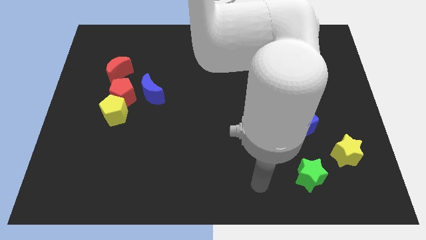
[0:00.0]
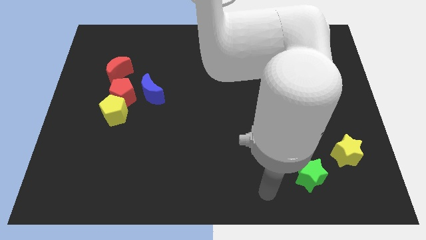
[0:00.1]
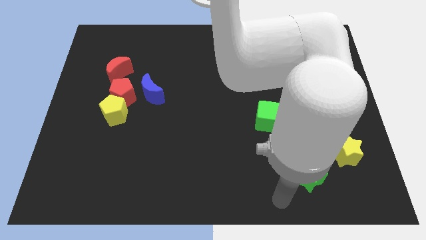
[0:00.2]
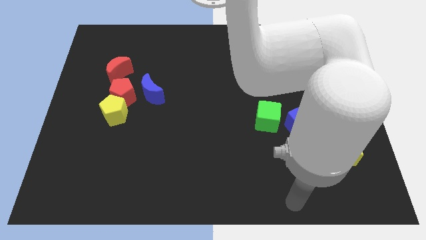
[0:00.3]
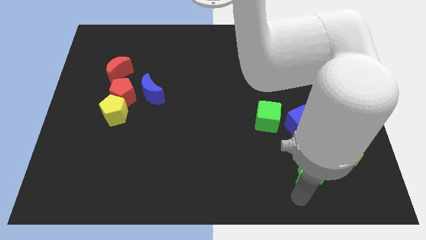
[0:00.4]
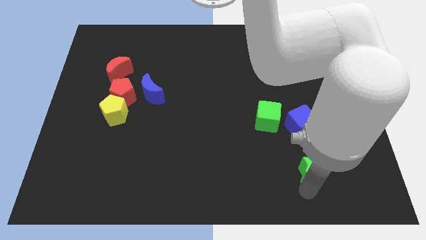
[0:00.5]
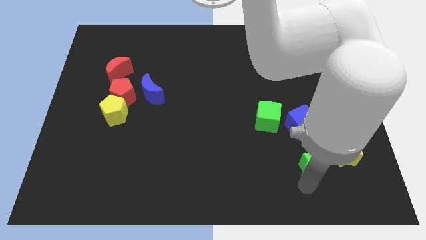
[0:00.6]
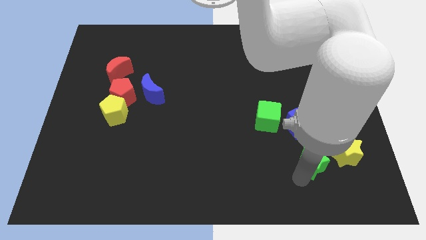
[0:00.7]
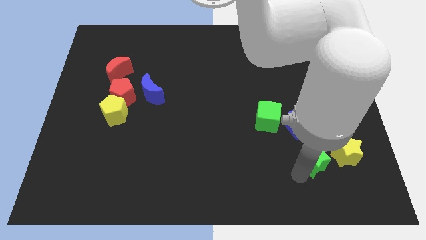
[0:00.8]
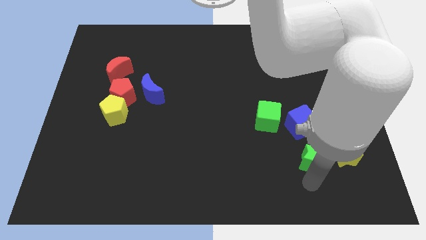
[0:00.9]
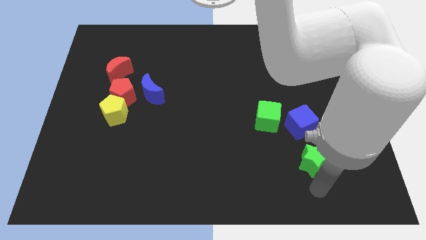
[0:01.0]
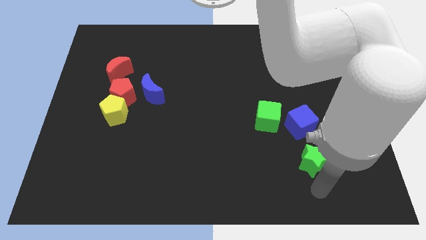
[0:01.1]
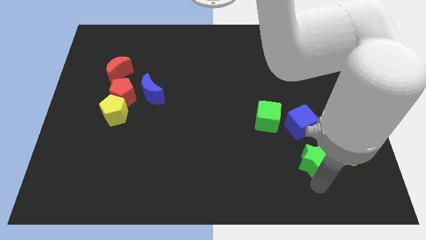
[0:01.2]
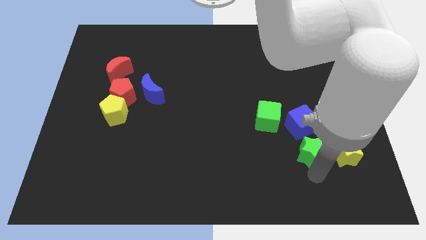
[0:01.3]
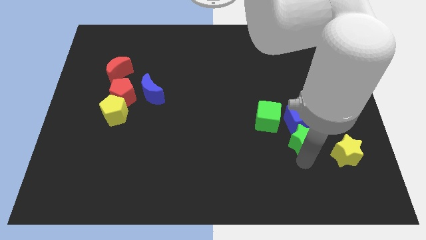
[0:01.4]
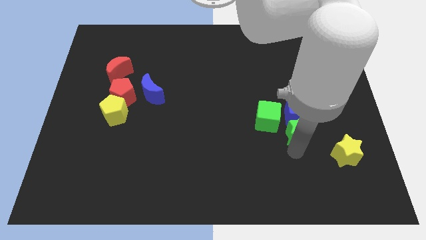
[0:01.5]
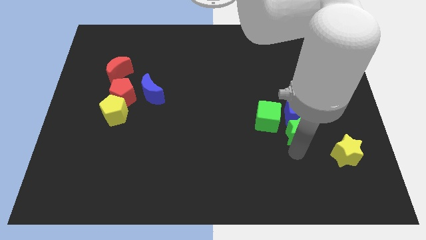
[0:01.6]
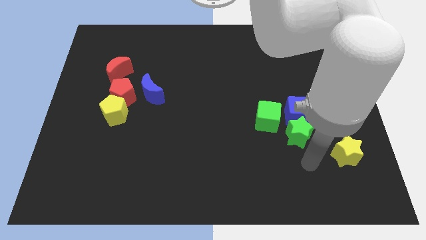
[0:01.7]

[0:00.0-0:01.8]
push the green star into the blue cube towards the top

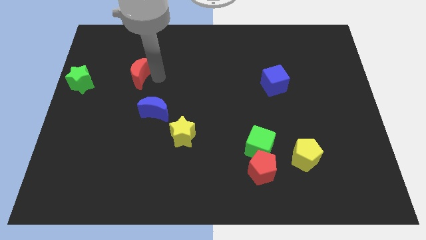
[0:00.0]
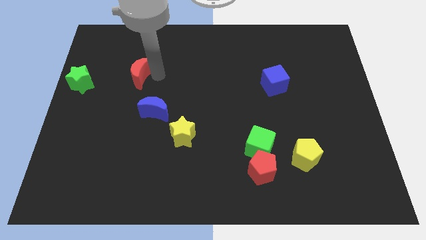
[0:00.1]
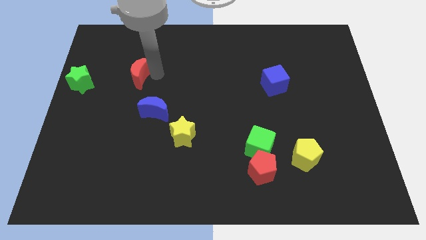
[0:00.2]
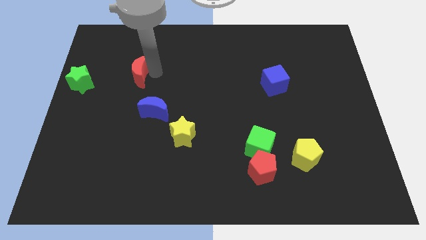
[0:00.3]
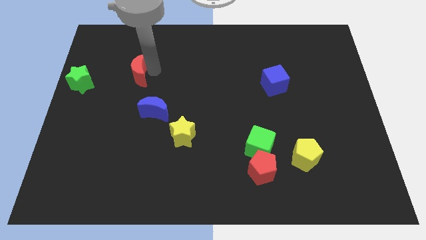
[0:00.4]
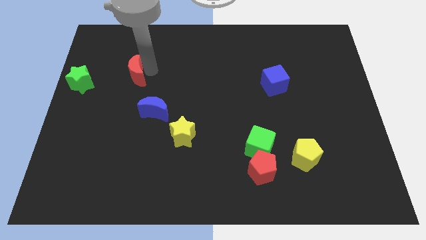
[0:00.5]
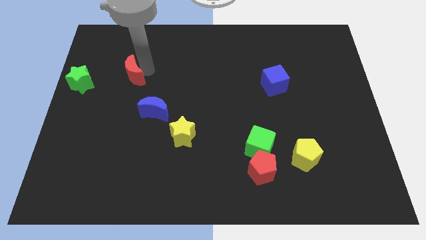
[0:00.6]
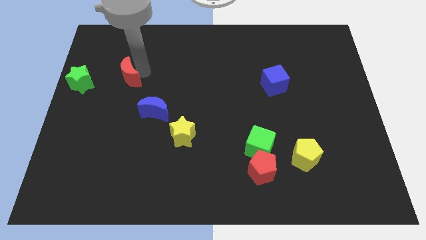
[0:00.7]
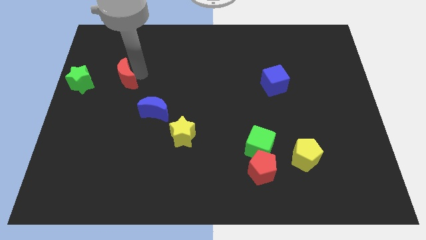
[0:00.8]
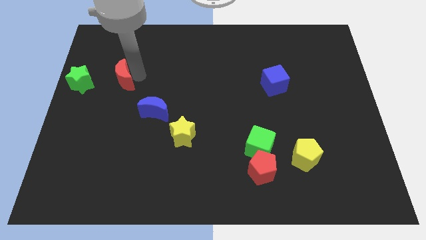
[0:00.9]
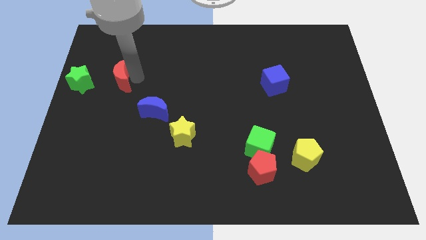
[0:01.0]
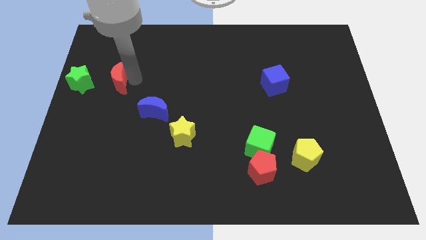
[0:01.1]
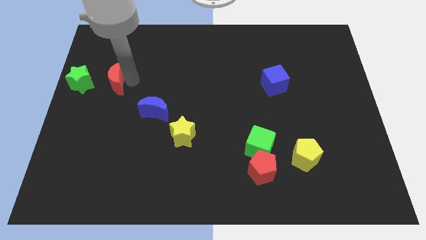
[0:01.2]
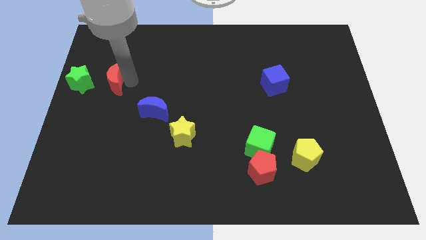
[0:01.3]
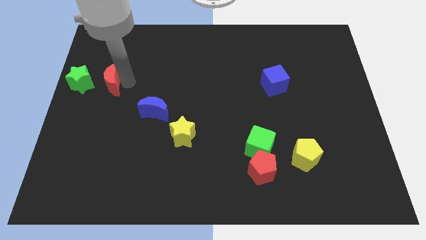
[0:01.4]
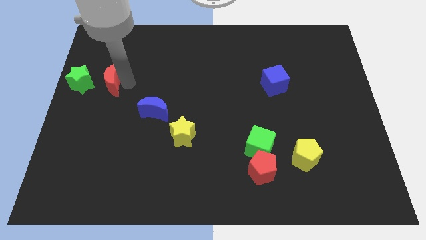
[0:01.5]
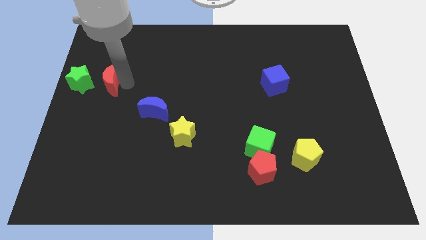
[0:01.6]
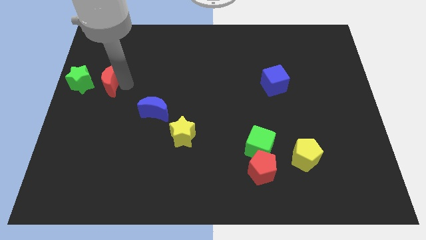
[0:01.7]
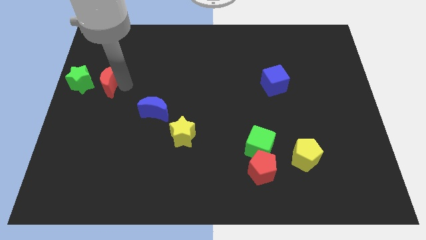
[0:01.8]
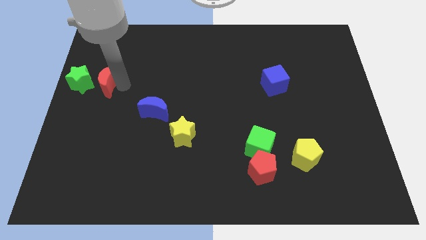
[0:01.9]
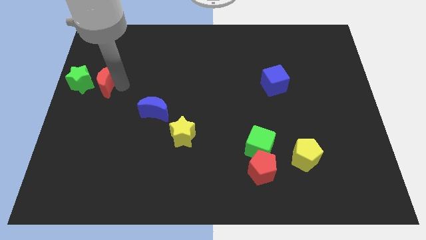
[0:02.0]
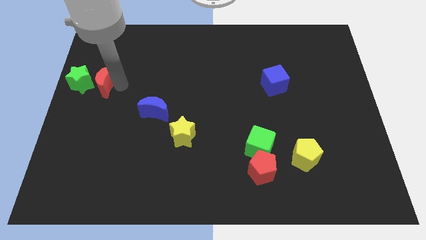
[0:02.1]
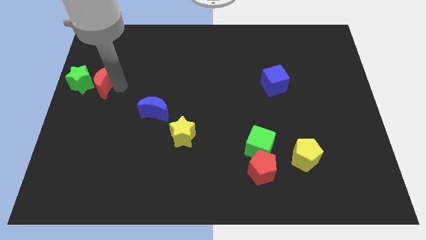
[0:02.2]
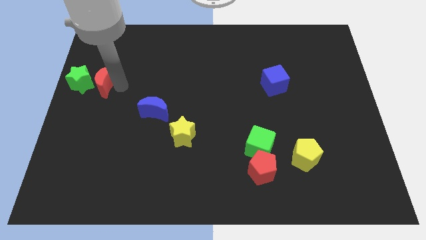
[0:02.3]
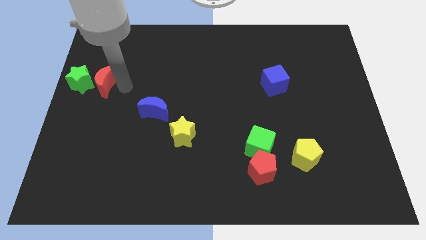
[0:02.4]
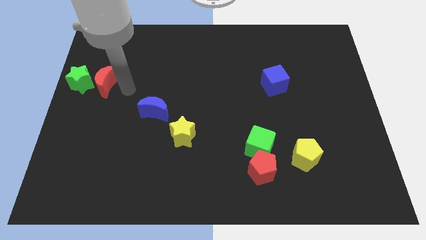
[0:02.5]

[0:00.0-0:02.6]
move the red moon to the right side of the green star

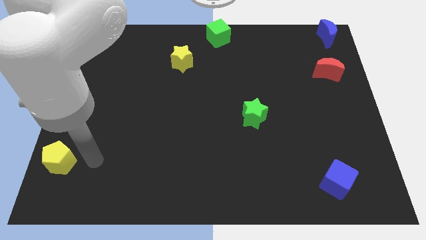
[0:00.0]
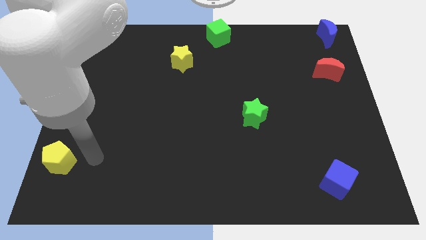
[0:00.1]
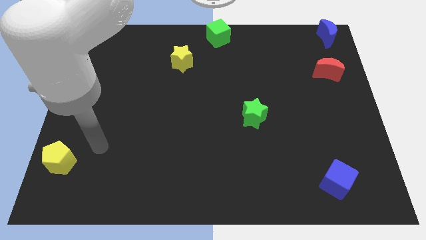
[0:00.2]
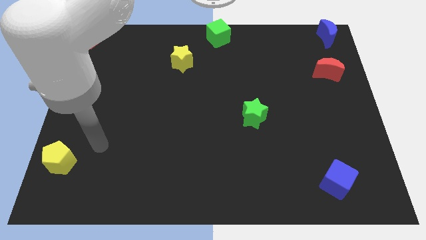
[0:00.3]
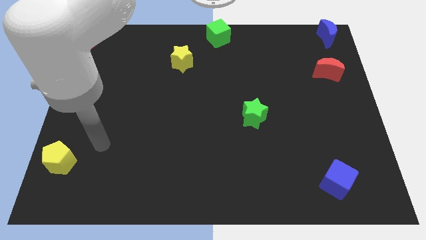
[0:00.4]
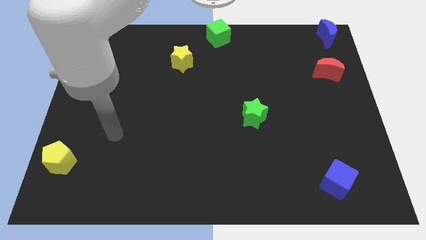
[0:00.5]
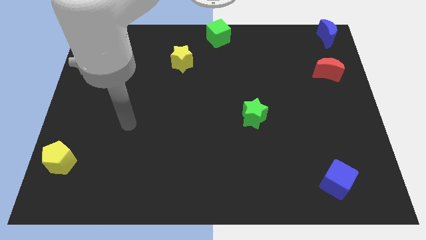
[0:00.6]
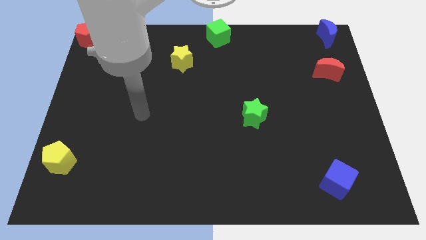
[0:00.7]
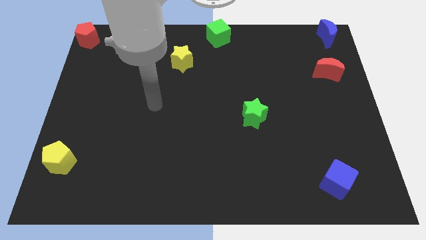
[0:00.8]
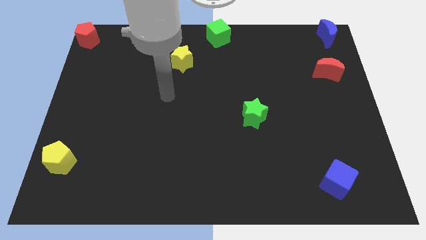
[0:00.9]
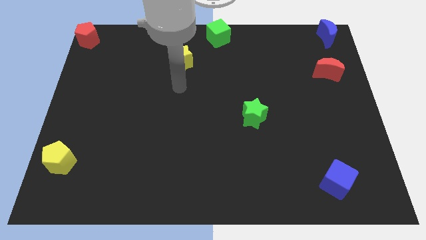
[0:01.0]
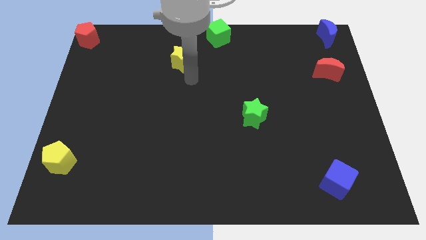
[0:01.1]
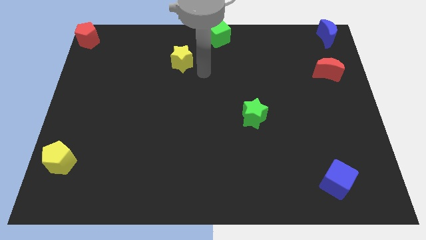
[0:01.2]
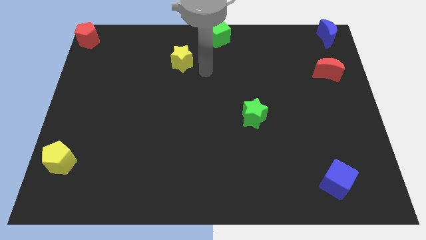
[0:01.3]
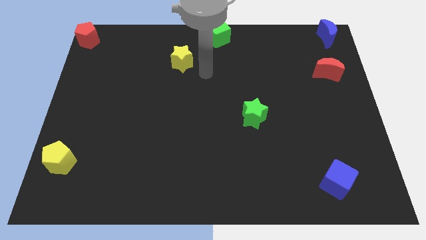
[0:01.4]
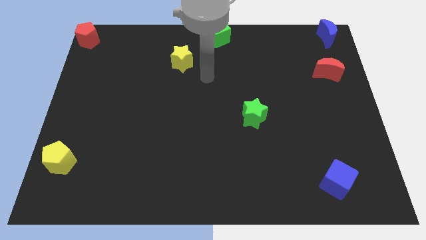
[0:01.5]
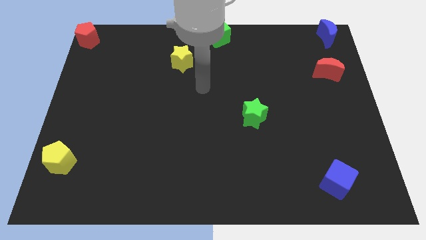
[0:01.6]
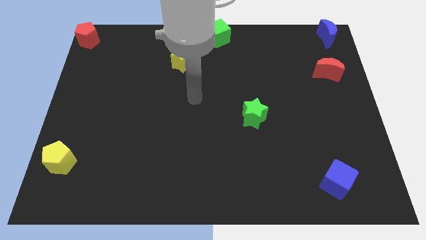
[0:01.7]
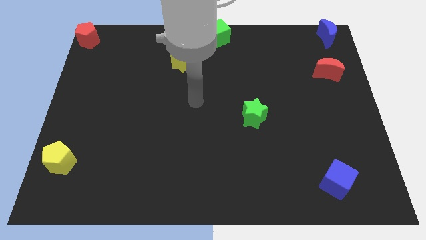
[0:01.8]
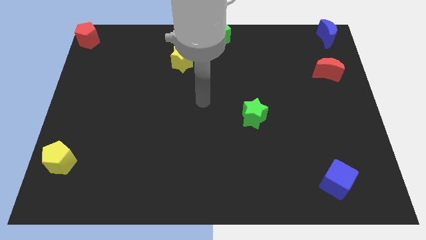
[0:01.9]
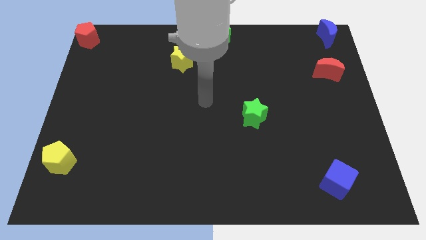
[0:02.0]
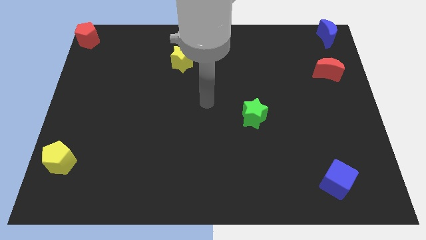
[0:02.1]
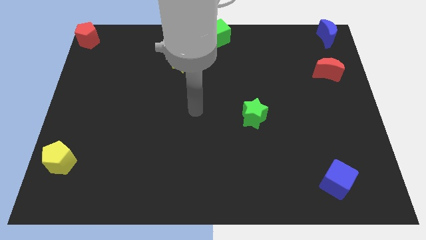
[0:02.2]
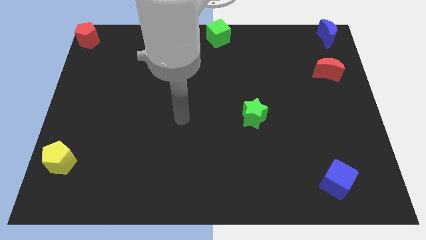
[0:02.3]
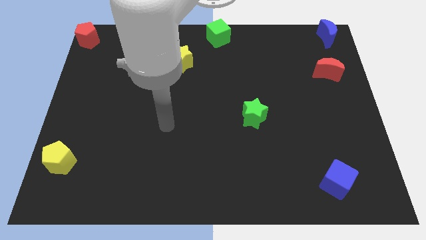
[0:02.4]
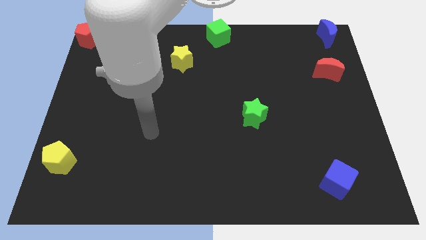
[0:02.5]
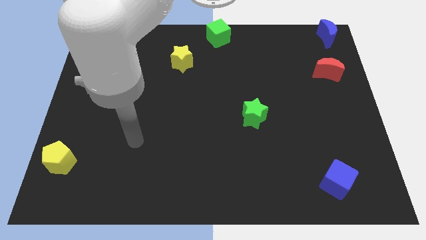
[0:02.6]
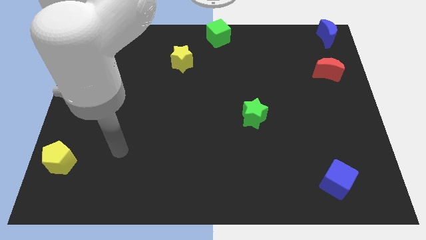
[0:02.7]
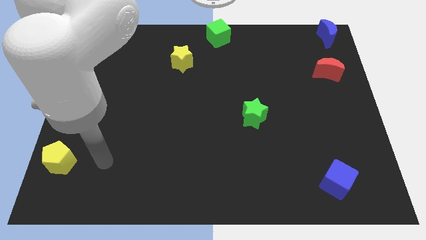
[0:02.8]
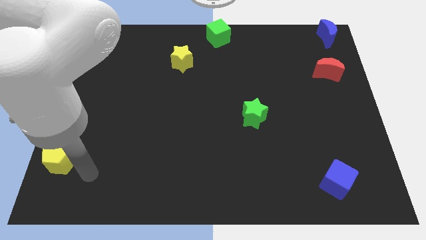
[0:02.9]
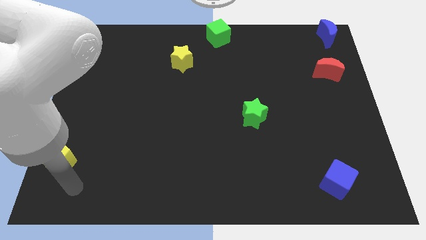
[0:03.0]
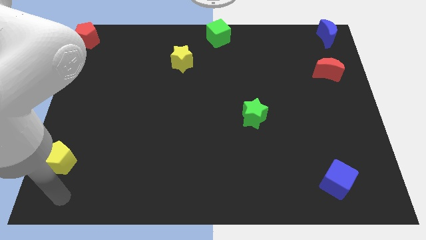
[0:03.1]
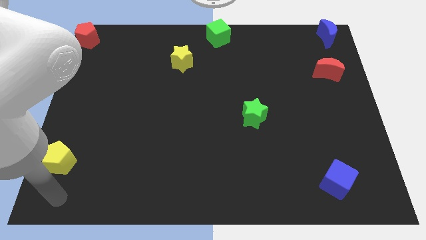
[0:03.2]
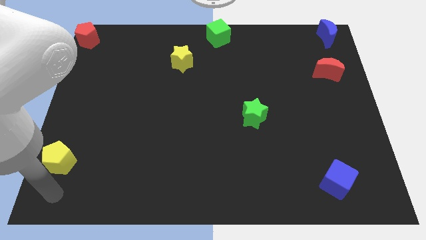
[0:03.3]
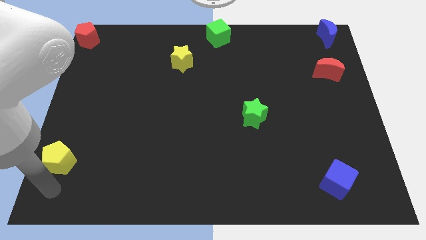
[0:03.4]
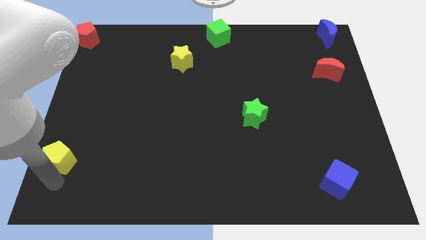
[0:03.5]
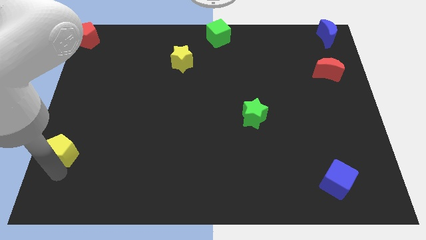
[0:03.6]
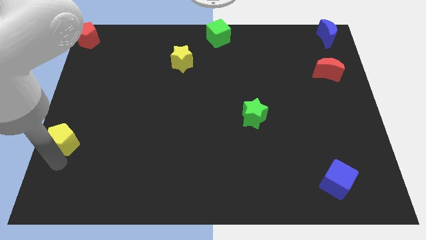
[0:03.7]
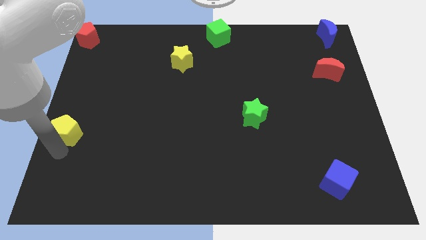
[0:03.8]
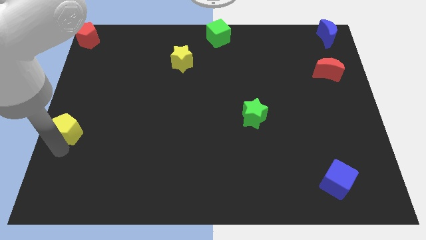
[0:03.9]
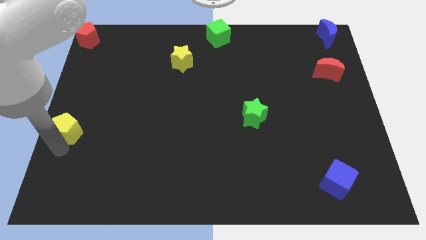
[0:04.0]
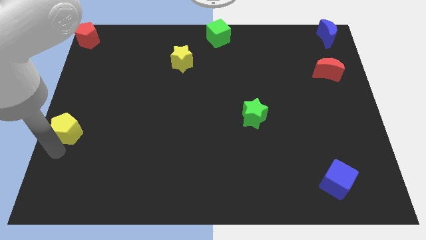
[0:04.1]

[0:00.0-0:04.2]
drag the yellow pentagon towards the center left

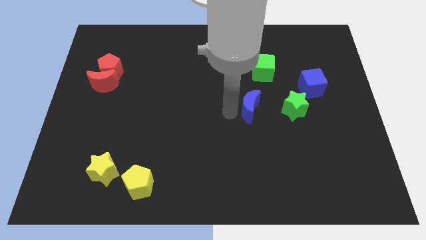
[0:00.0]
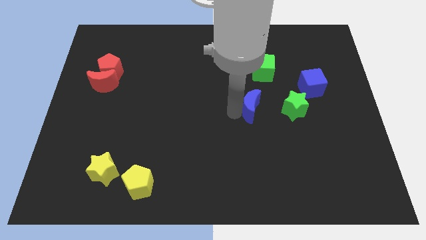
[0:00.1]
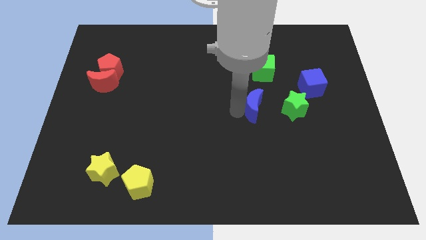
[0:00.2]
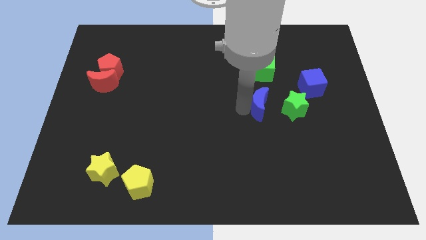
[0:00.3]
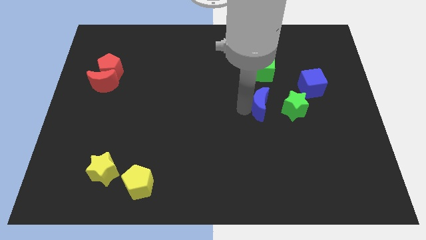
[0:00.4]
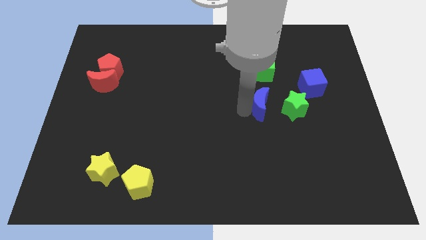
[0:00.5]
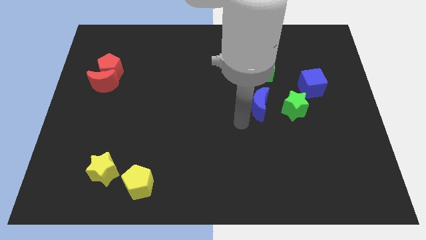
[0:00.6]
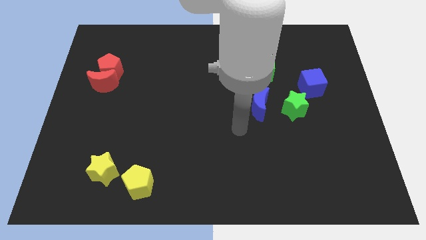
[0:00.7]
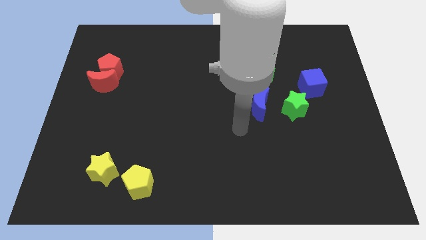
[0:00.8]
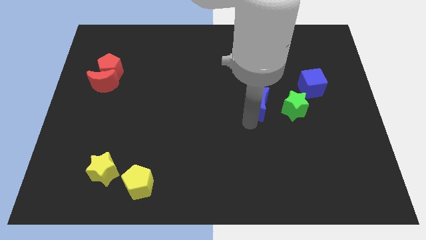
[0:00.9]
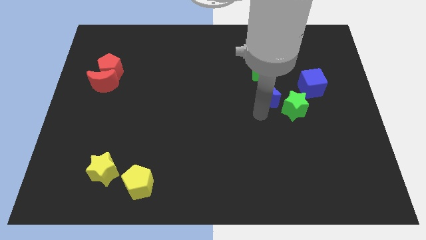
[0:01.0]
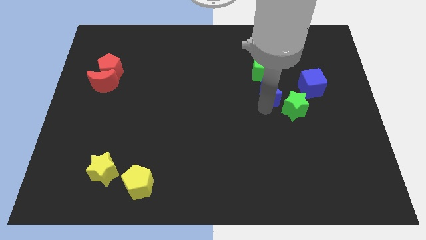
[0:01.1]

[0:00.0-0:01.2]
slide blue moon into green star
